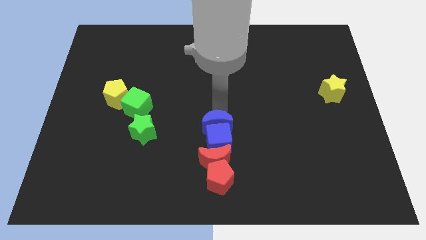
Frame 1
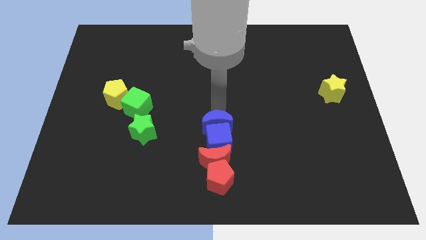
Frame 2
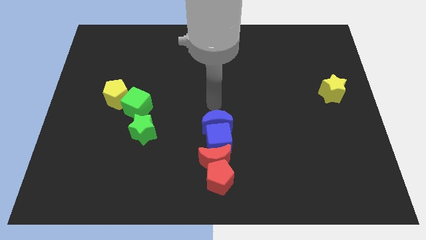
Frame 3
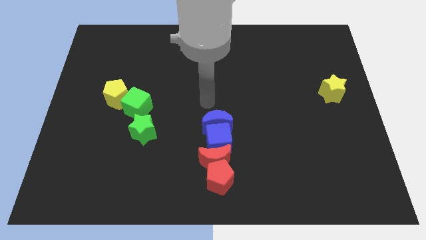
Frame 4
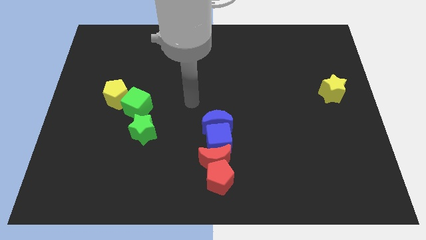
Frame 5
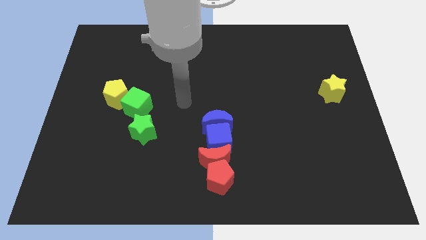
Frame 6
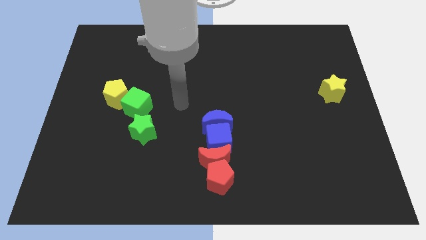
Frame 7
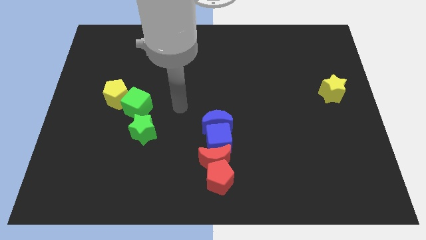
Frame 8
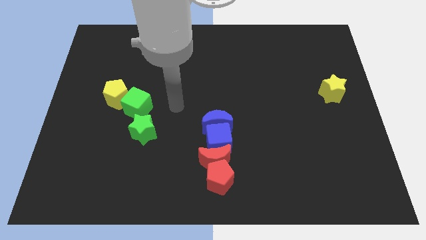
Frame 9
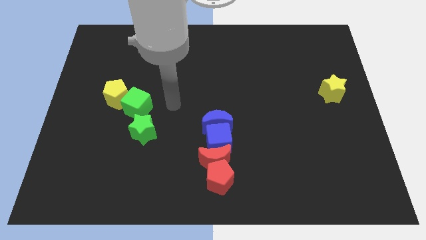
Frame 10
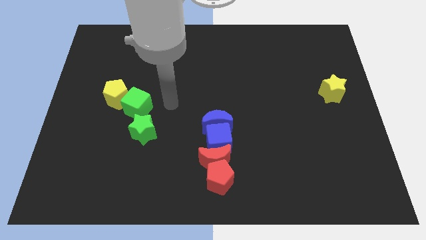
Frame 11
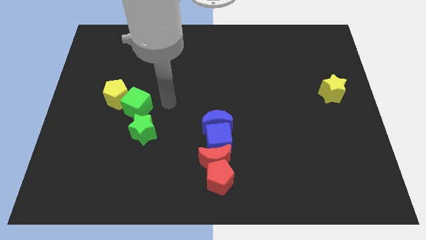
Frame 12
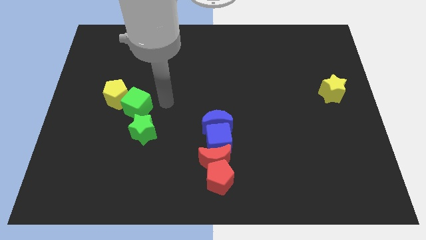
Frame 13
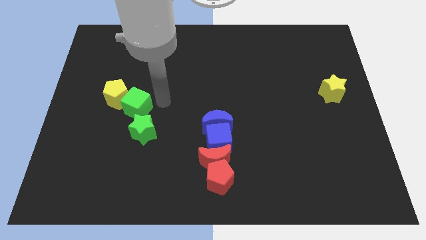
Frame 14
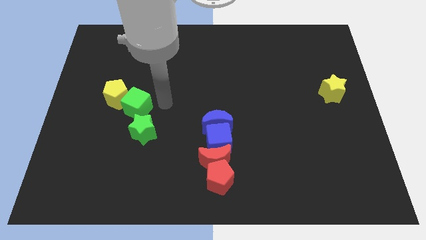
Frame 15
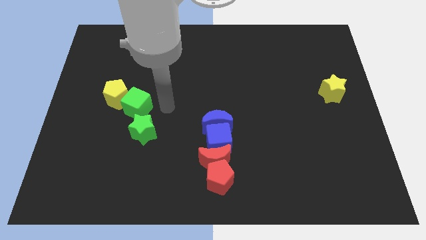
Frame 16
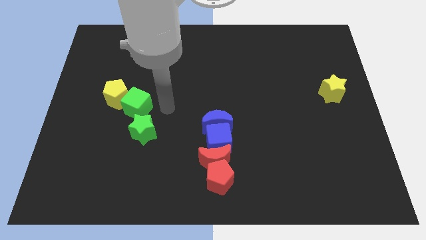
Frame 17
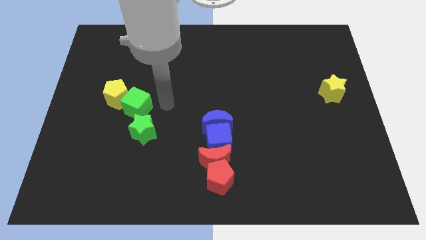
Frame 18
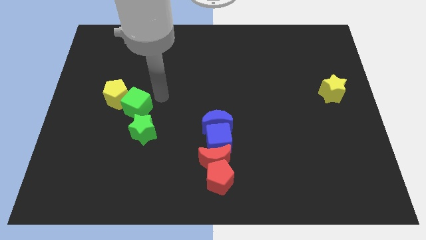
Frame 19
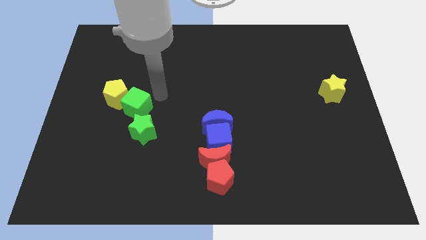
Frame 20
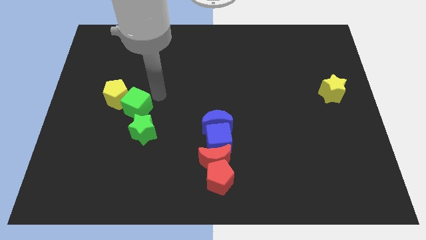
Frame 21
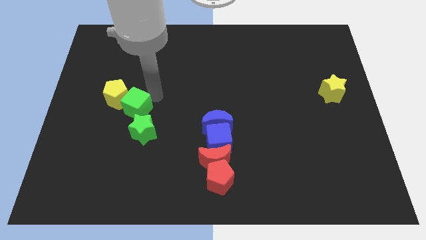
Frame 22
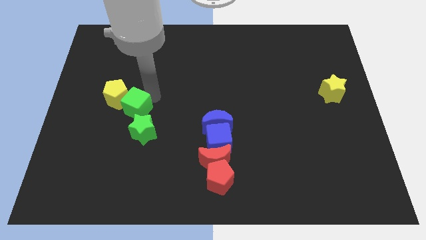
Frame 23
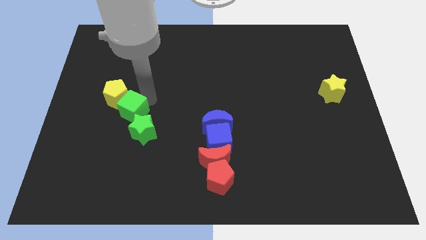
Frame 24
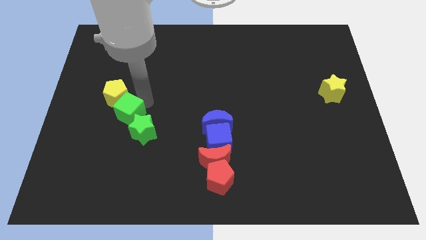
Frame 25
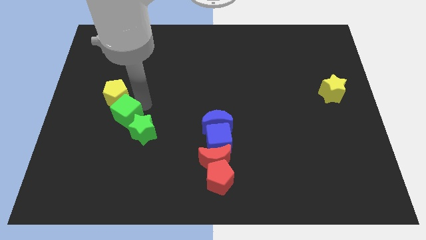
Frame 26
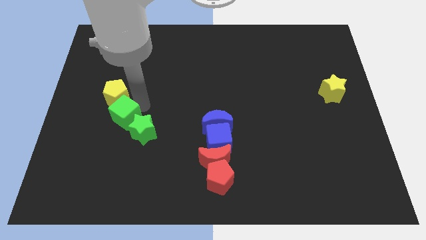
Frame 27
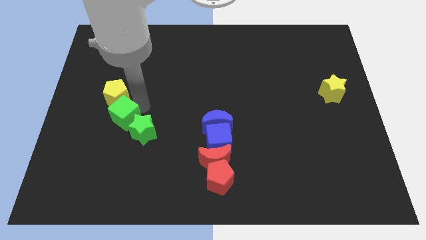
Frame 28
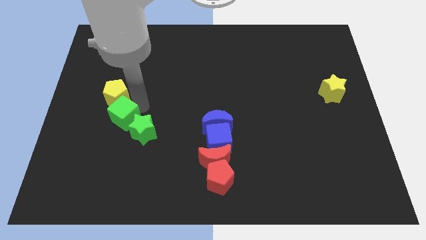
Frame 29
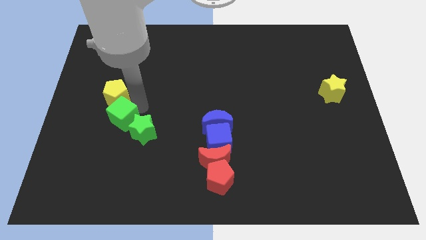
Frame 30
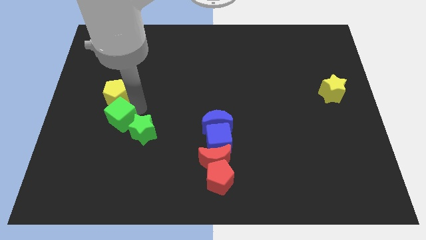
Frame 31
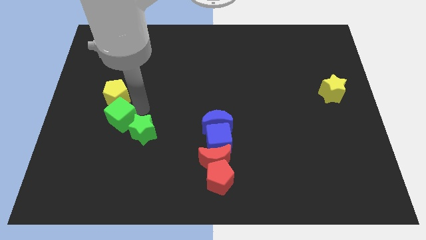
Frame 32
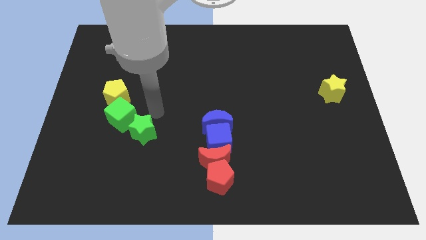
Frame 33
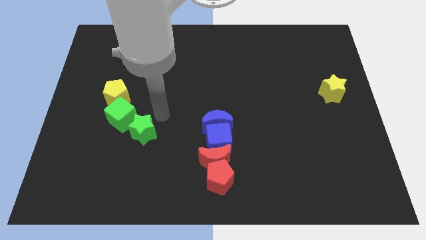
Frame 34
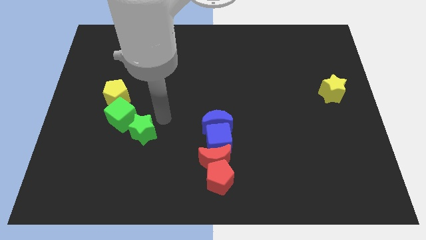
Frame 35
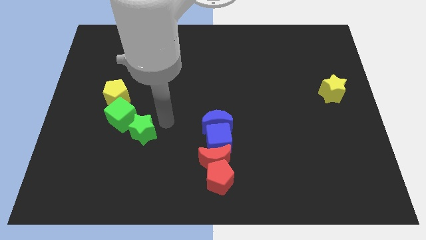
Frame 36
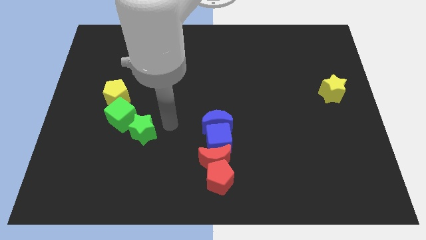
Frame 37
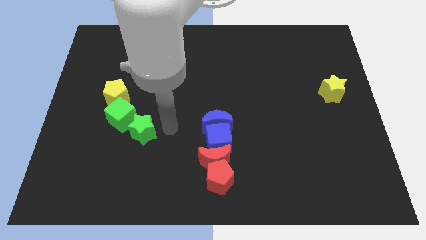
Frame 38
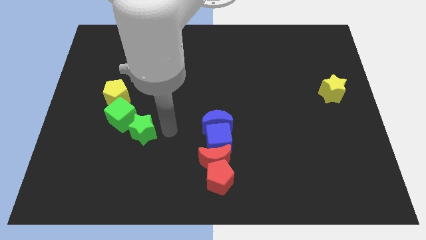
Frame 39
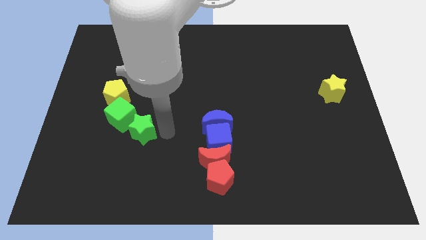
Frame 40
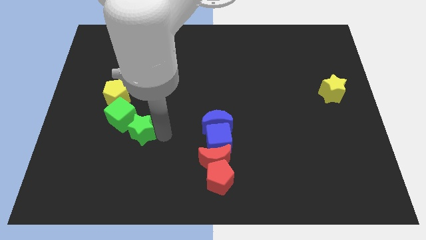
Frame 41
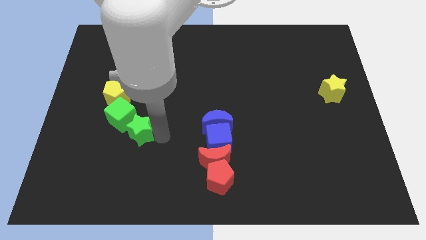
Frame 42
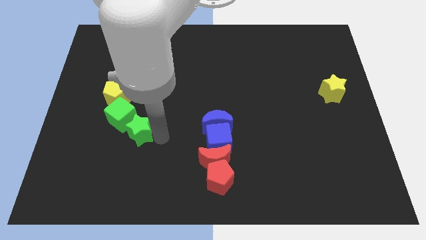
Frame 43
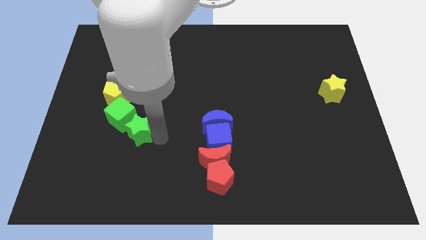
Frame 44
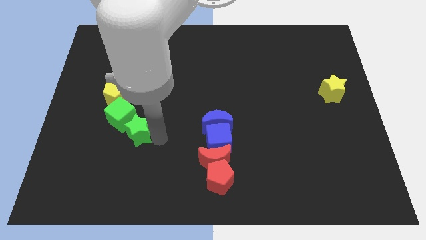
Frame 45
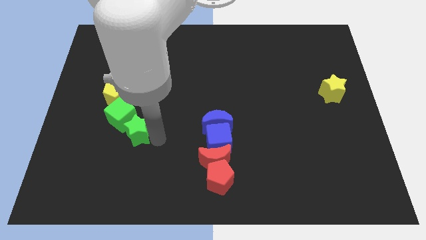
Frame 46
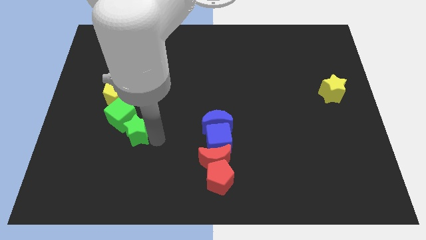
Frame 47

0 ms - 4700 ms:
move green star into the green cube

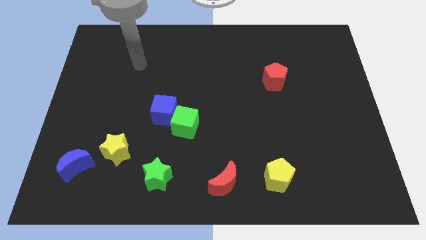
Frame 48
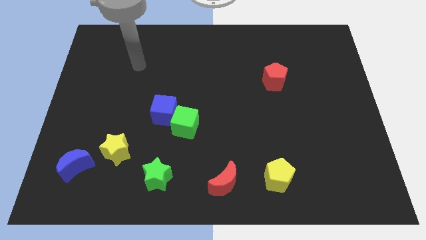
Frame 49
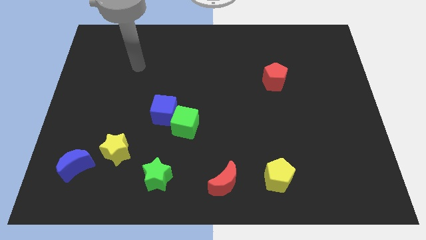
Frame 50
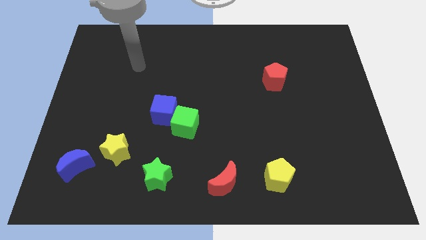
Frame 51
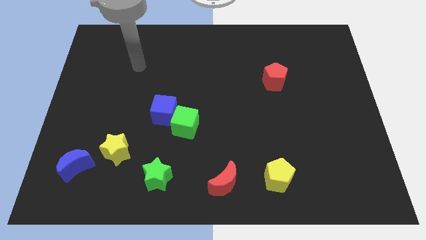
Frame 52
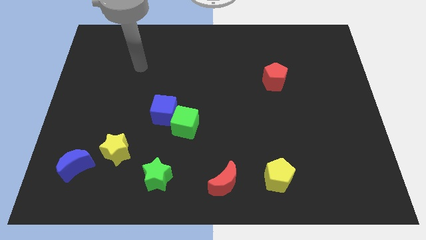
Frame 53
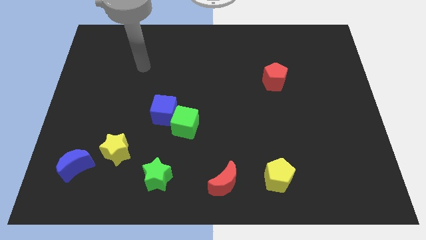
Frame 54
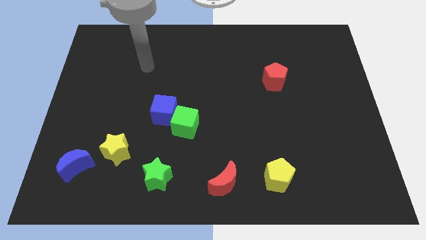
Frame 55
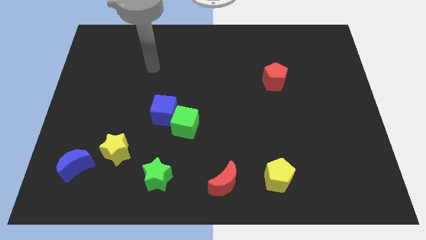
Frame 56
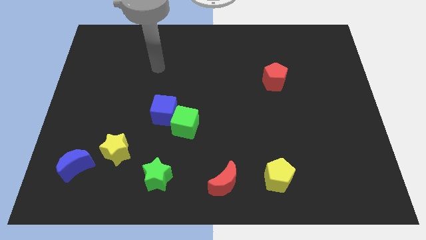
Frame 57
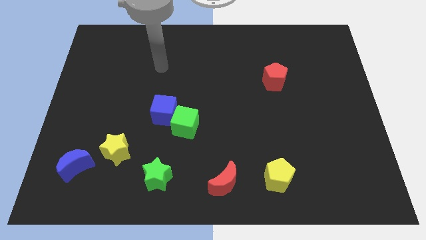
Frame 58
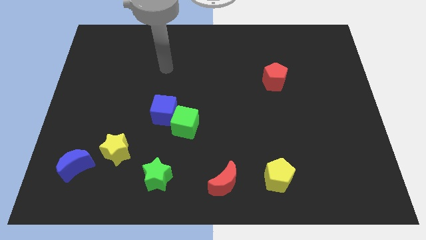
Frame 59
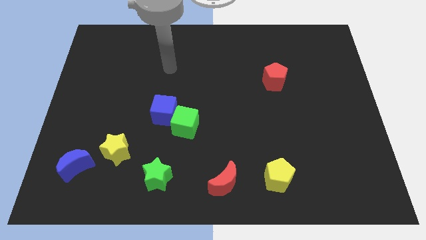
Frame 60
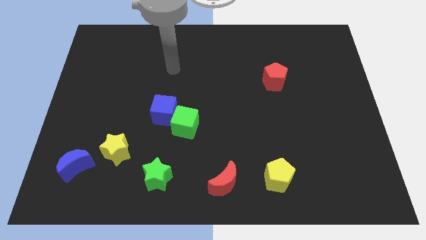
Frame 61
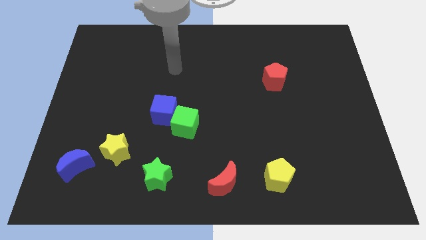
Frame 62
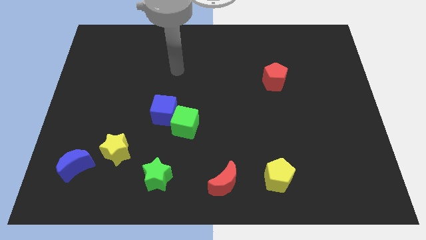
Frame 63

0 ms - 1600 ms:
put your hand vertically above the blue cube

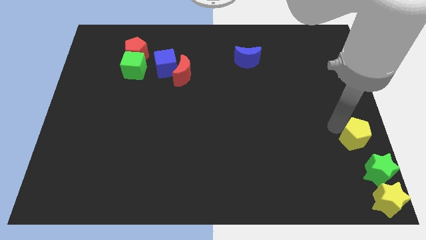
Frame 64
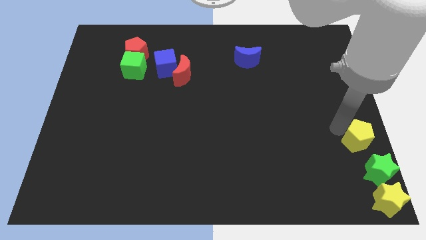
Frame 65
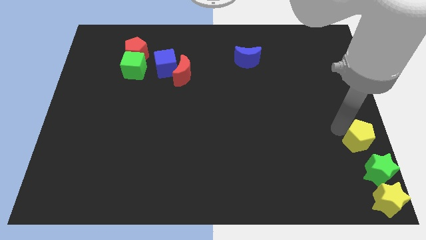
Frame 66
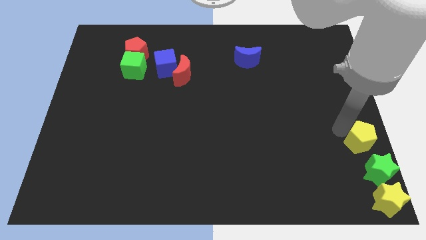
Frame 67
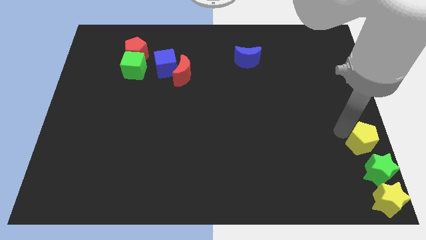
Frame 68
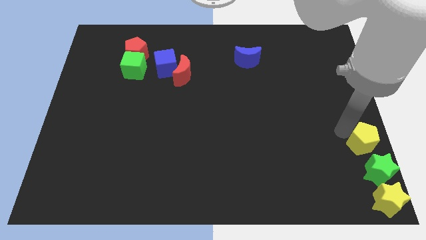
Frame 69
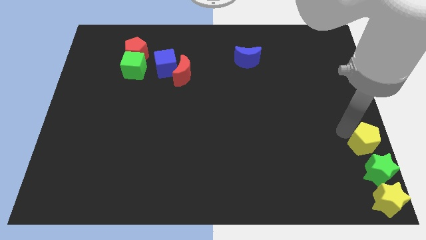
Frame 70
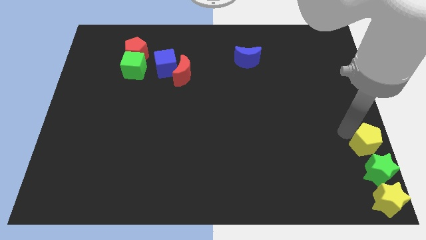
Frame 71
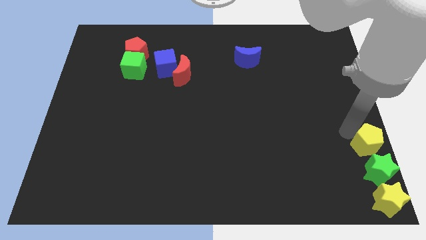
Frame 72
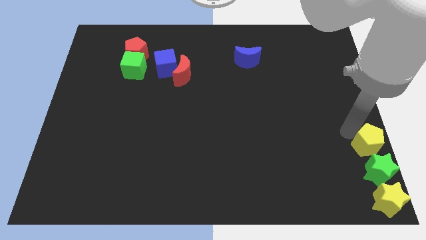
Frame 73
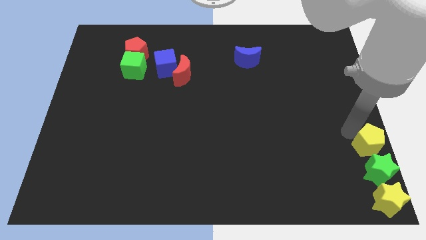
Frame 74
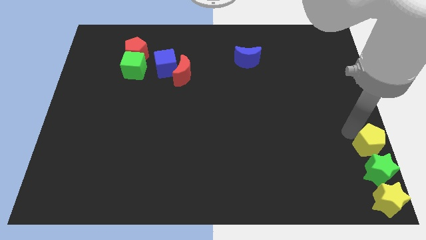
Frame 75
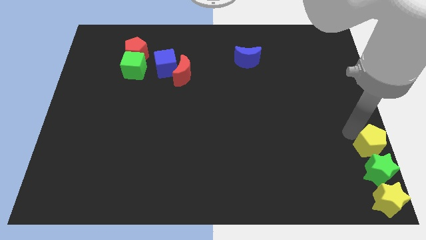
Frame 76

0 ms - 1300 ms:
move the yellow pentagon to the top of green star

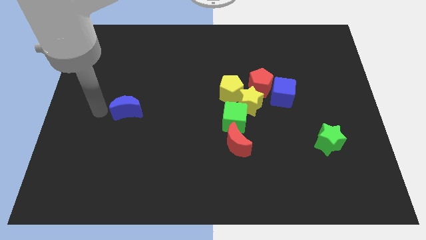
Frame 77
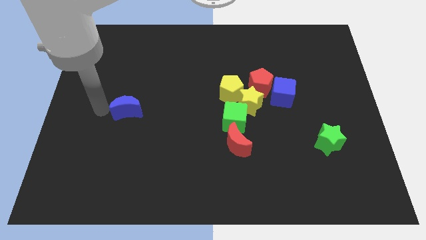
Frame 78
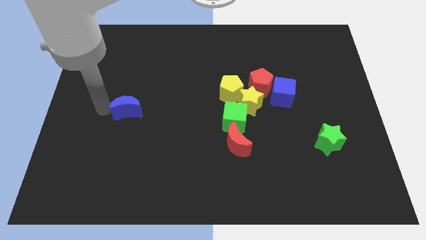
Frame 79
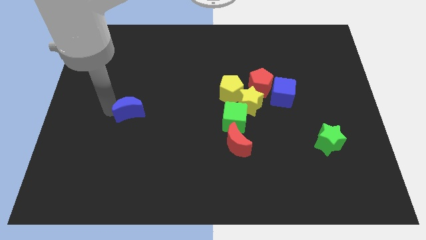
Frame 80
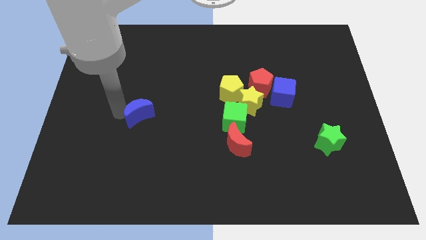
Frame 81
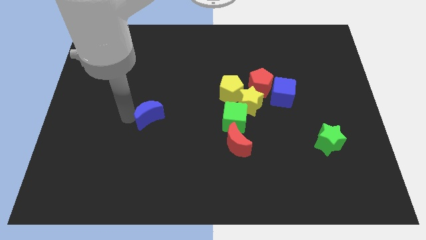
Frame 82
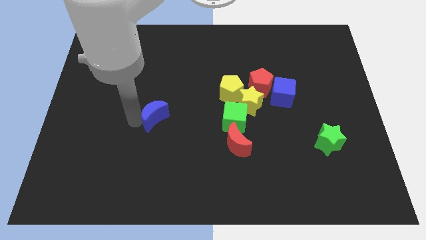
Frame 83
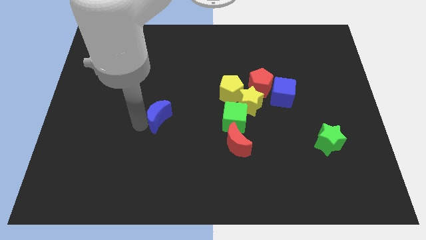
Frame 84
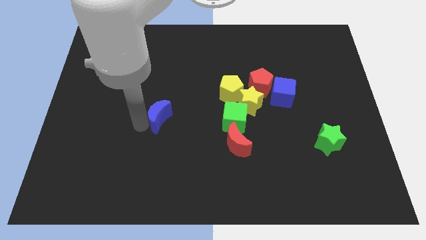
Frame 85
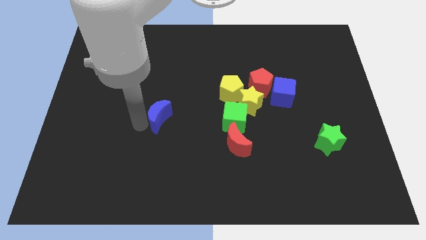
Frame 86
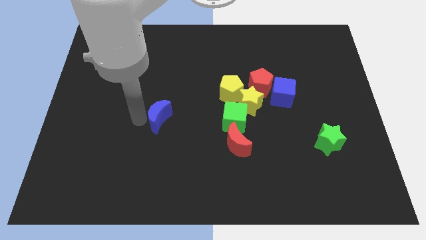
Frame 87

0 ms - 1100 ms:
push blue moon towards green cube

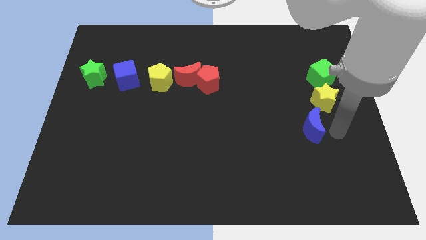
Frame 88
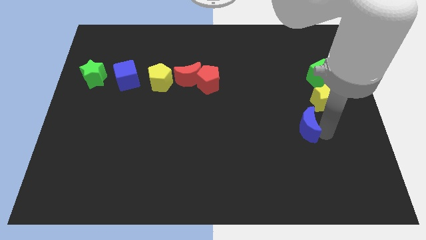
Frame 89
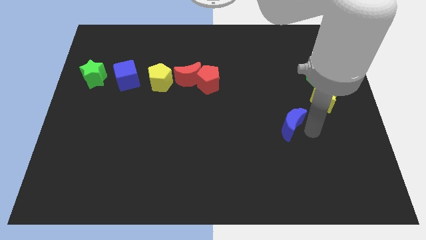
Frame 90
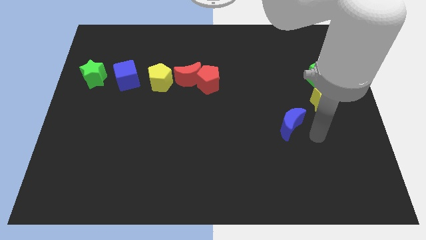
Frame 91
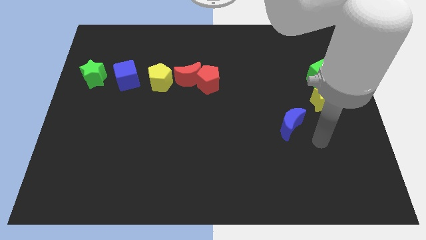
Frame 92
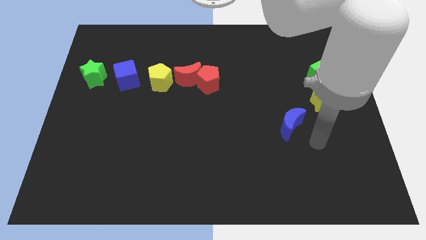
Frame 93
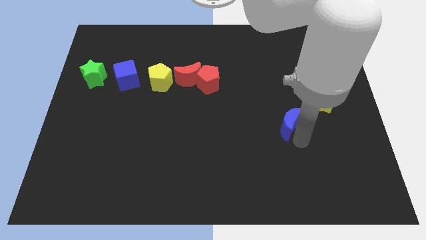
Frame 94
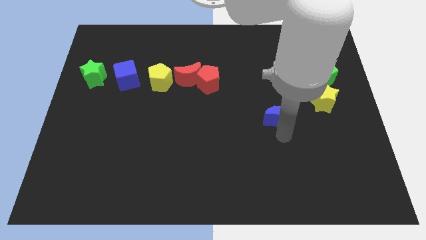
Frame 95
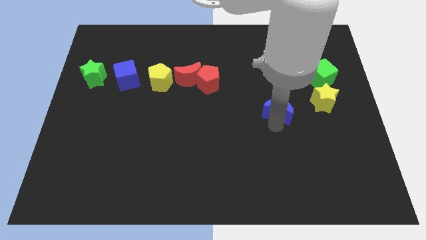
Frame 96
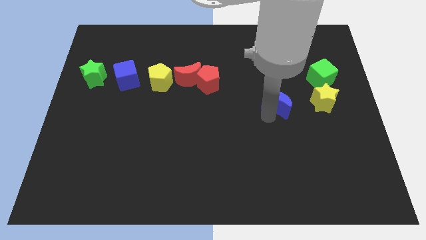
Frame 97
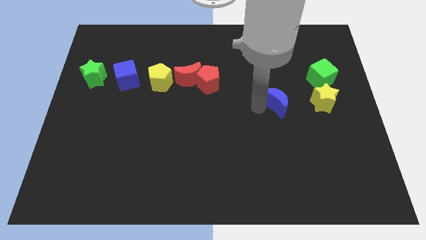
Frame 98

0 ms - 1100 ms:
move blue moon left beside the yellow star
